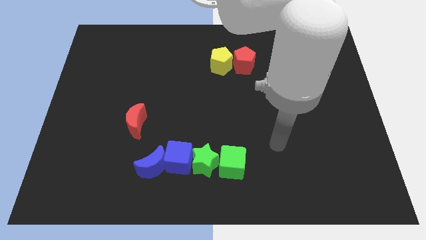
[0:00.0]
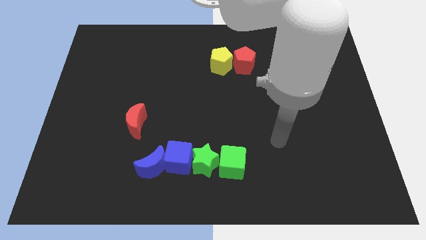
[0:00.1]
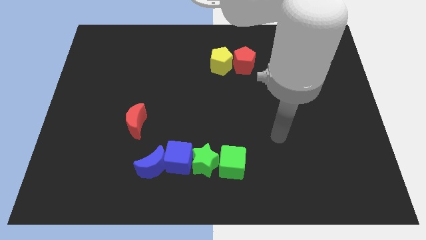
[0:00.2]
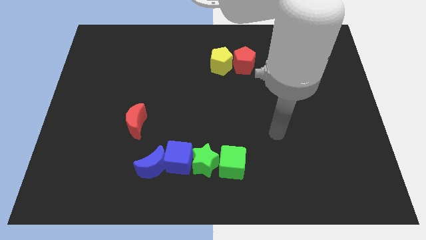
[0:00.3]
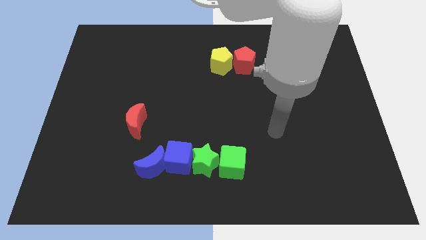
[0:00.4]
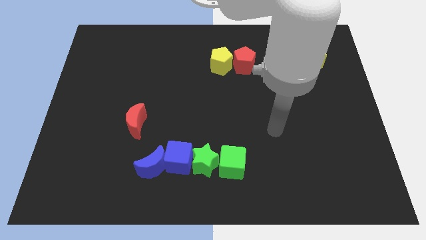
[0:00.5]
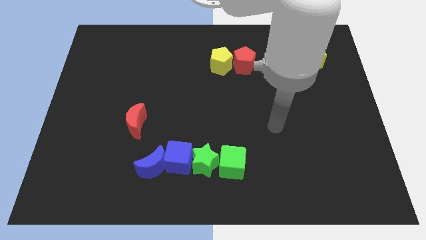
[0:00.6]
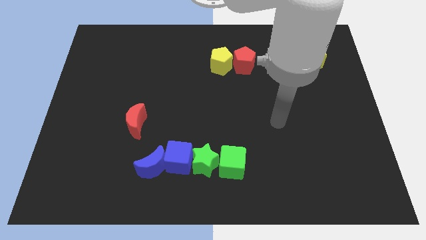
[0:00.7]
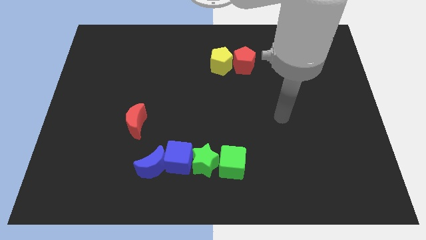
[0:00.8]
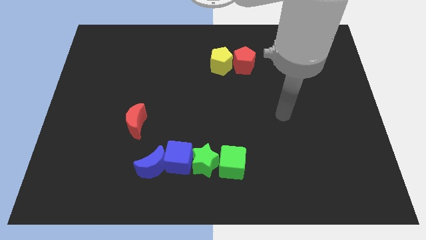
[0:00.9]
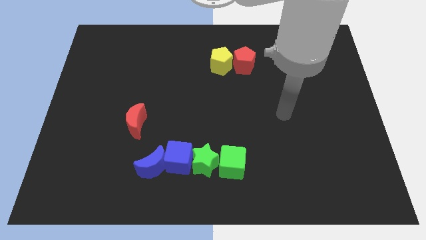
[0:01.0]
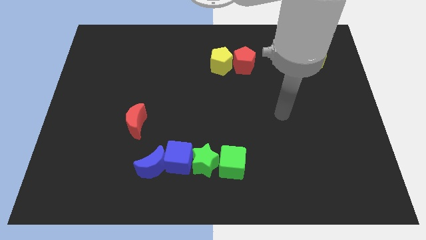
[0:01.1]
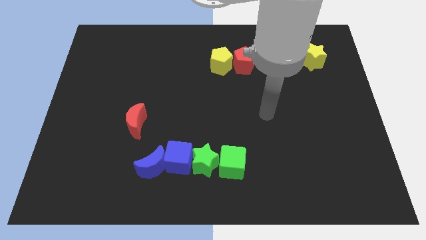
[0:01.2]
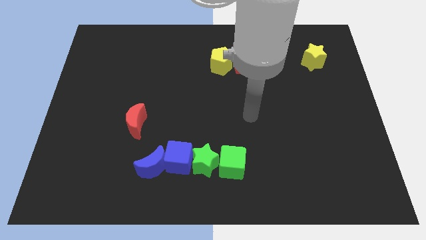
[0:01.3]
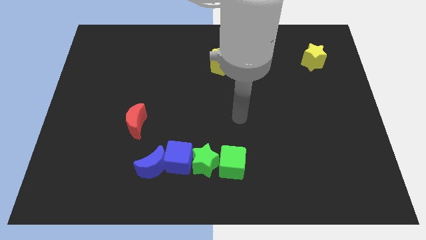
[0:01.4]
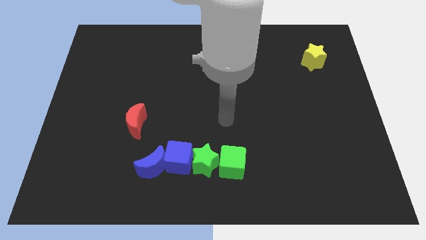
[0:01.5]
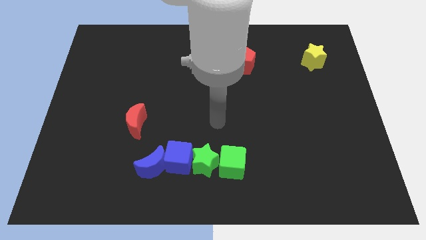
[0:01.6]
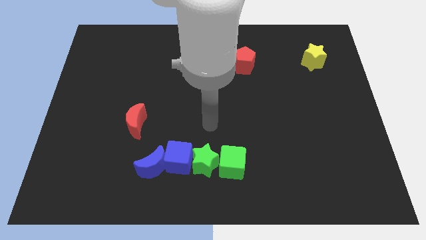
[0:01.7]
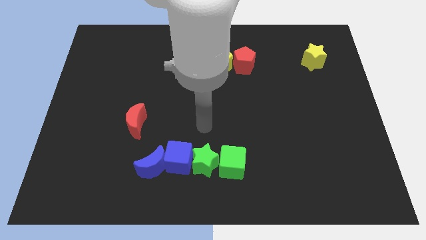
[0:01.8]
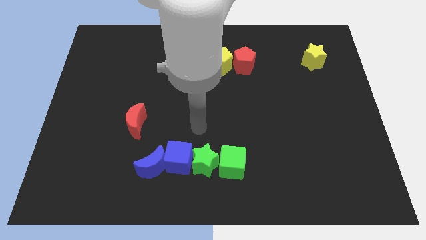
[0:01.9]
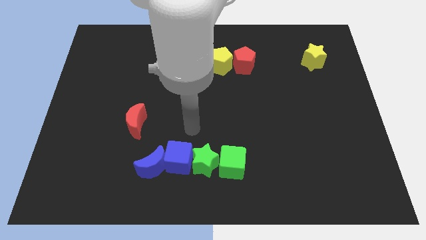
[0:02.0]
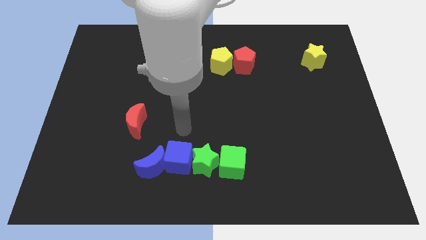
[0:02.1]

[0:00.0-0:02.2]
move your arm above to the blue cube

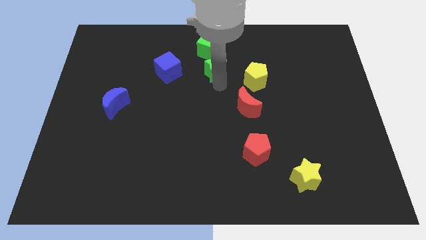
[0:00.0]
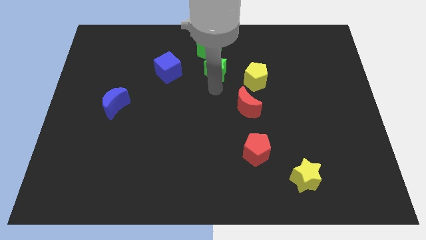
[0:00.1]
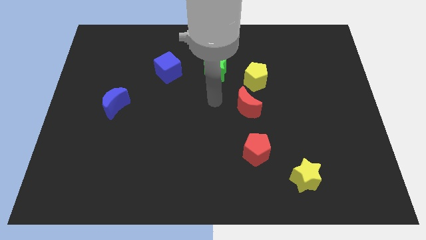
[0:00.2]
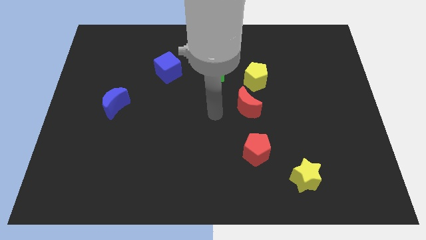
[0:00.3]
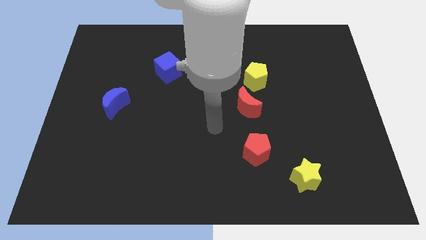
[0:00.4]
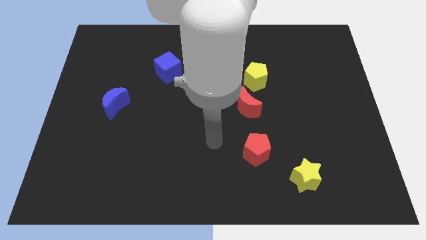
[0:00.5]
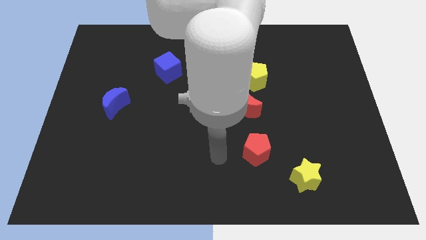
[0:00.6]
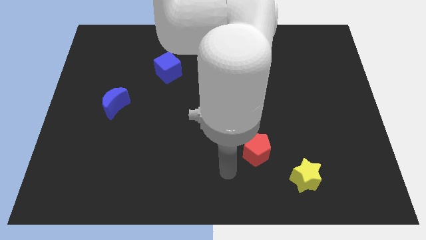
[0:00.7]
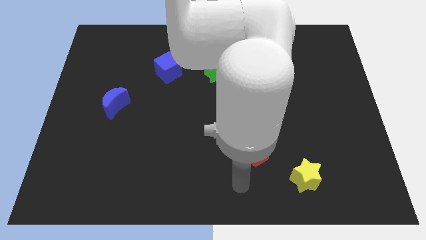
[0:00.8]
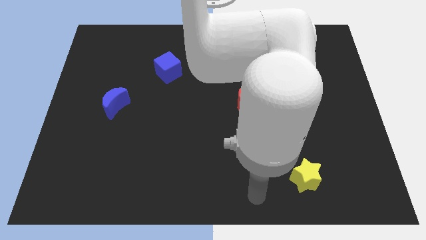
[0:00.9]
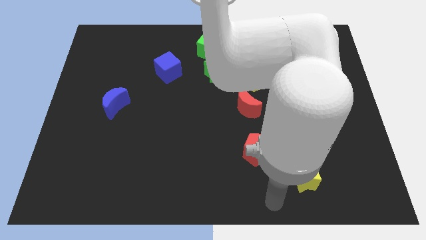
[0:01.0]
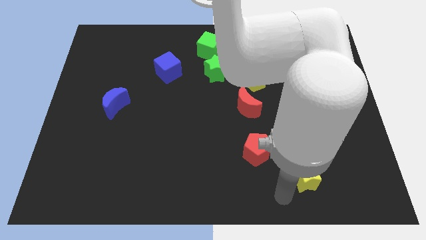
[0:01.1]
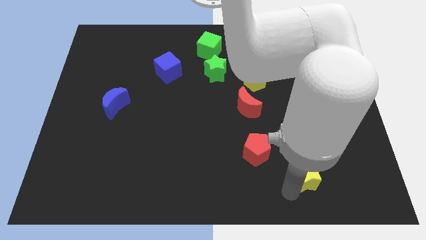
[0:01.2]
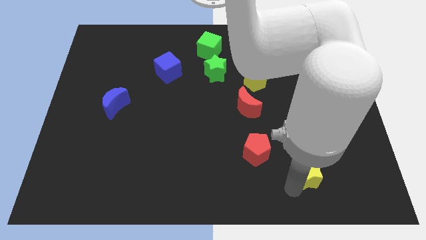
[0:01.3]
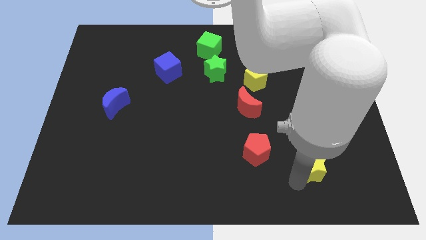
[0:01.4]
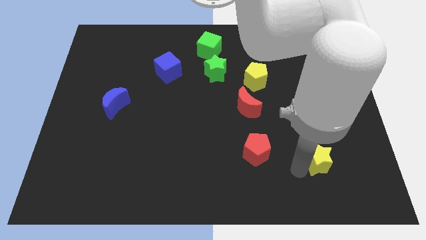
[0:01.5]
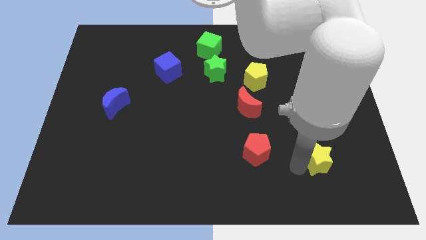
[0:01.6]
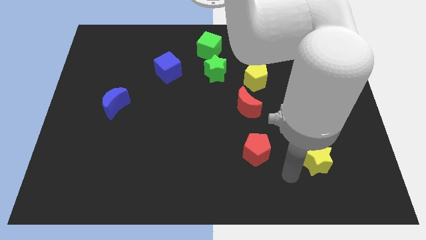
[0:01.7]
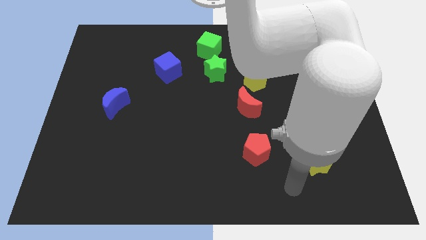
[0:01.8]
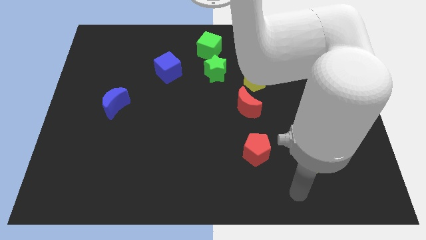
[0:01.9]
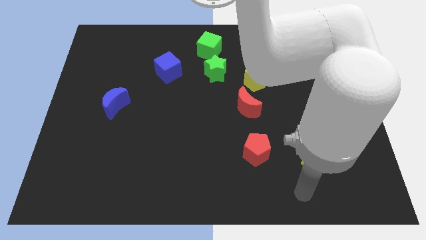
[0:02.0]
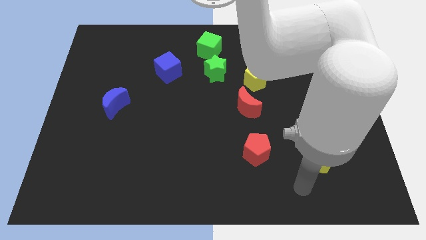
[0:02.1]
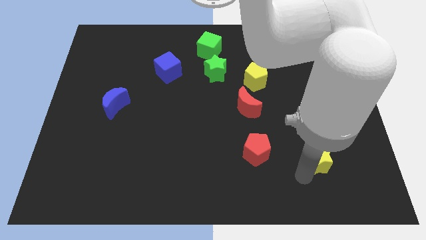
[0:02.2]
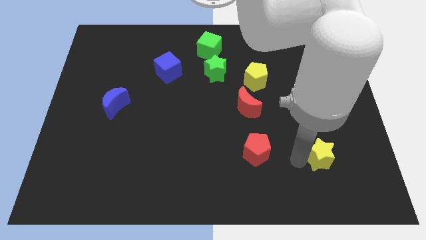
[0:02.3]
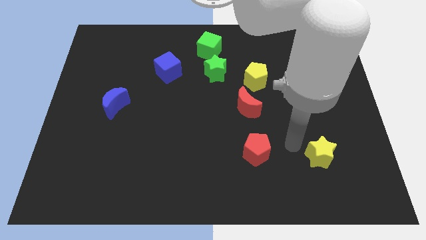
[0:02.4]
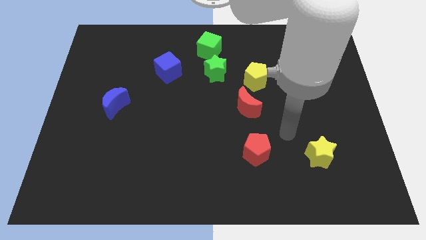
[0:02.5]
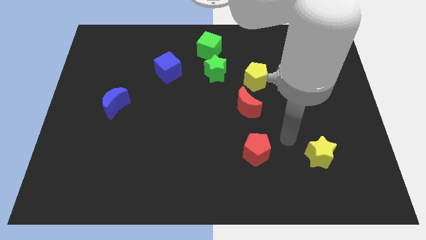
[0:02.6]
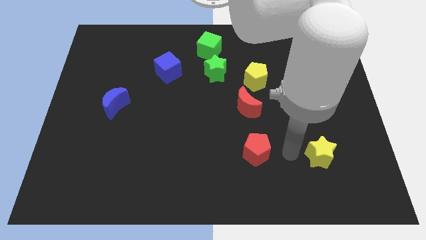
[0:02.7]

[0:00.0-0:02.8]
move the arm away from the green star

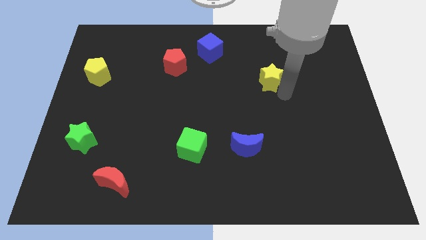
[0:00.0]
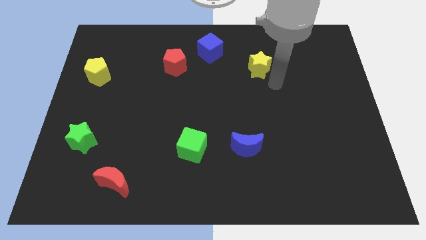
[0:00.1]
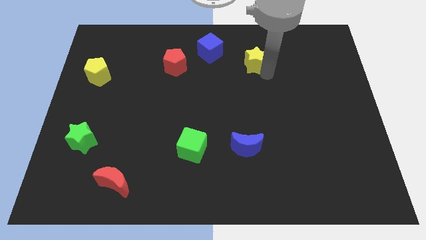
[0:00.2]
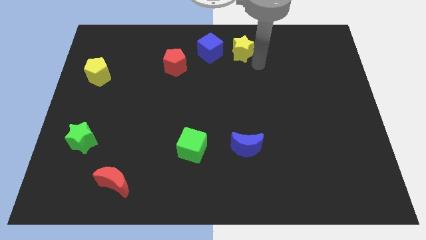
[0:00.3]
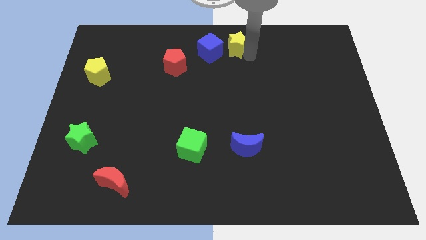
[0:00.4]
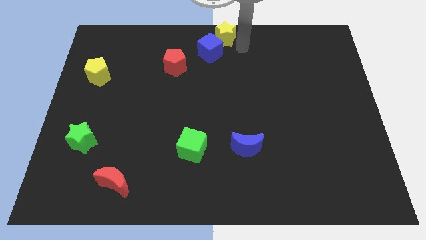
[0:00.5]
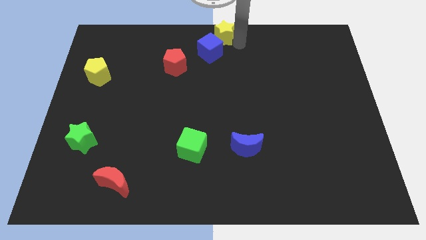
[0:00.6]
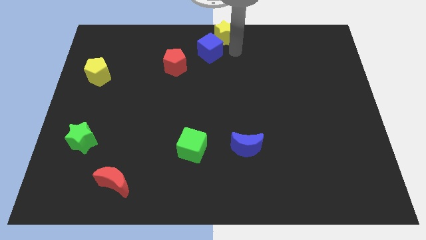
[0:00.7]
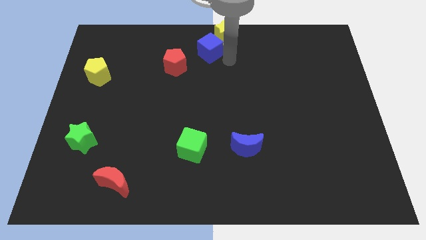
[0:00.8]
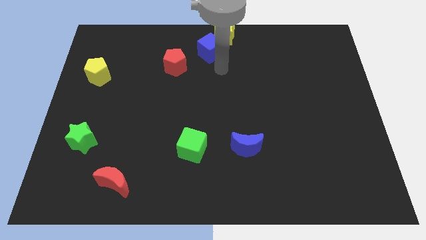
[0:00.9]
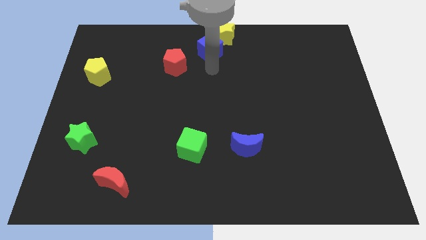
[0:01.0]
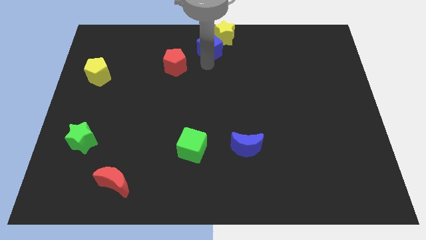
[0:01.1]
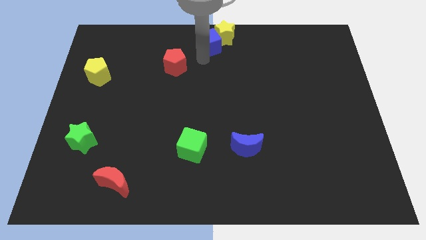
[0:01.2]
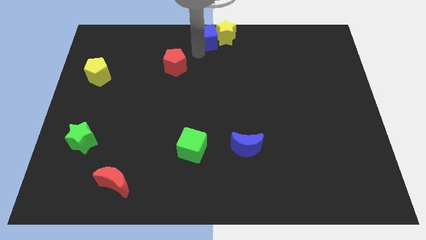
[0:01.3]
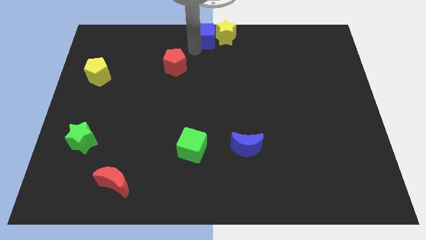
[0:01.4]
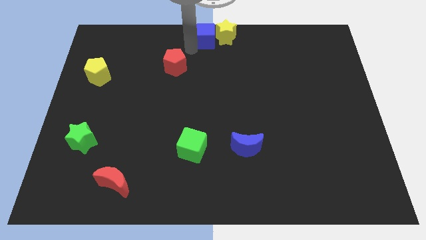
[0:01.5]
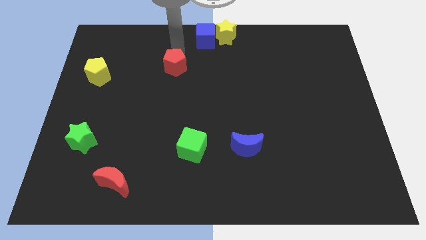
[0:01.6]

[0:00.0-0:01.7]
move the yellow star and the blue cube to the top center of the board

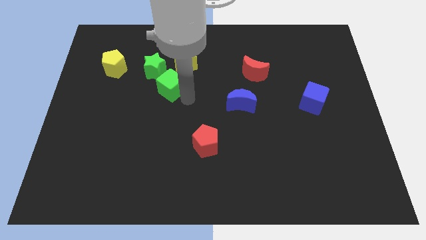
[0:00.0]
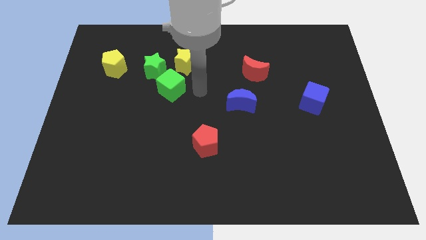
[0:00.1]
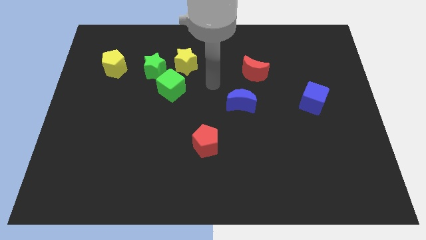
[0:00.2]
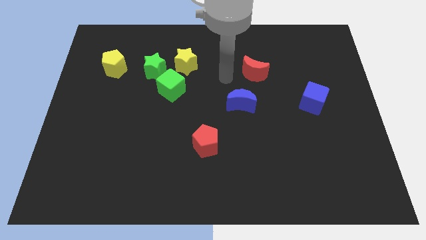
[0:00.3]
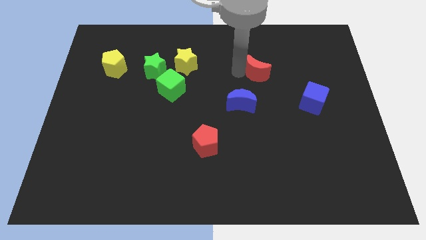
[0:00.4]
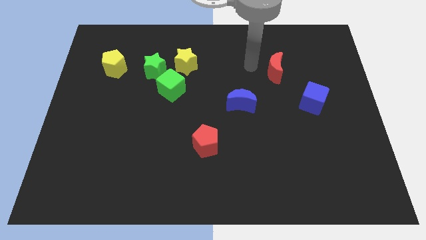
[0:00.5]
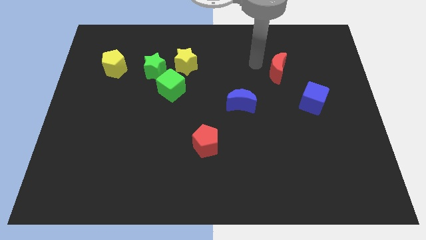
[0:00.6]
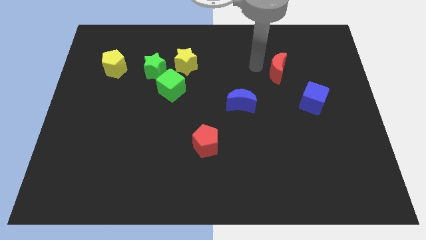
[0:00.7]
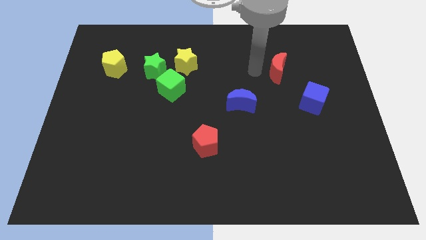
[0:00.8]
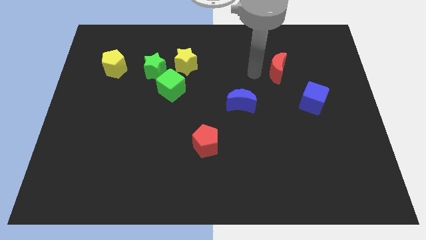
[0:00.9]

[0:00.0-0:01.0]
push the red moon to the right side of the board

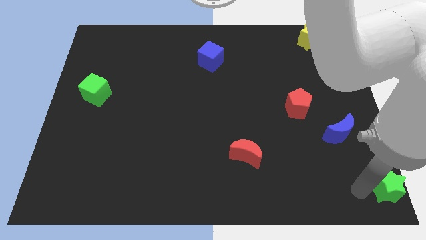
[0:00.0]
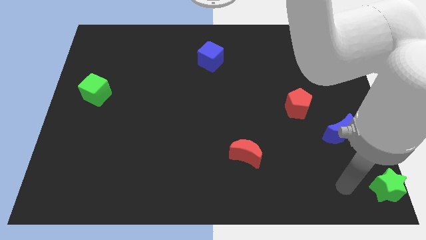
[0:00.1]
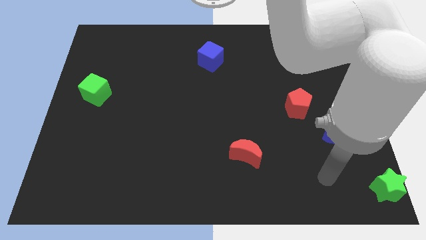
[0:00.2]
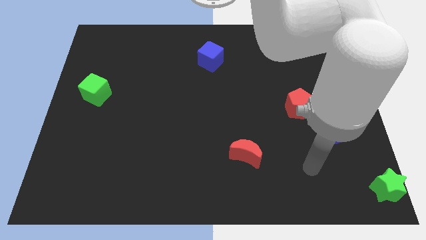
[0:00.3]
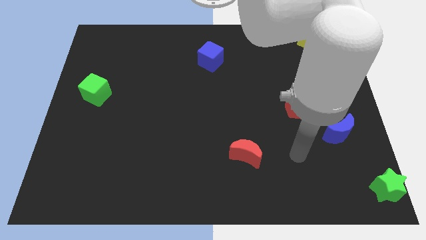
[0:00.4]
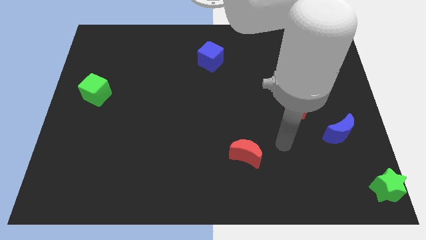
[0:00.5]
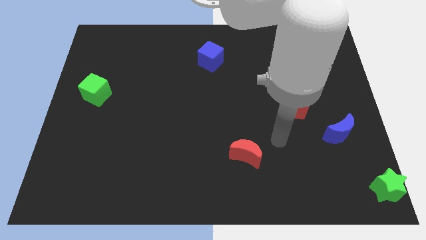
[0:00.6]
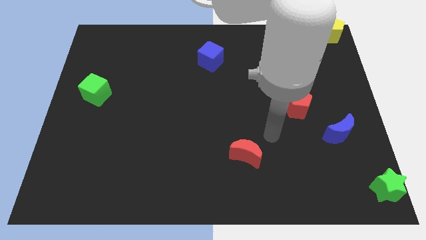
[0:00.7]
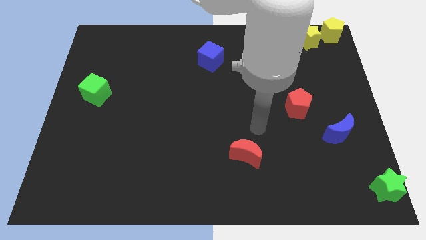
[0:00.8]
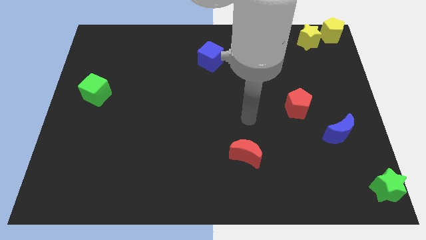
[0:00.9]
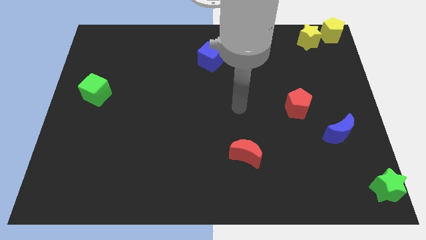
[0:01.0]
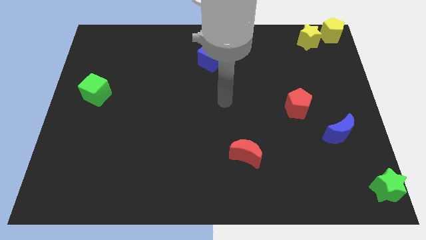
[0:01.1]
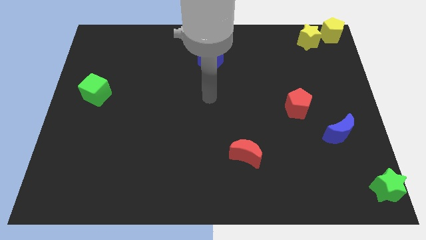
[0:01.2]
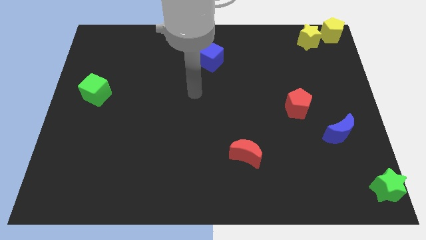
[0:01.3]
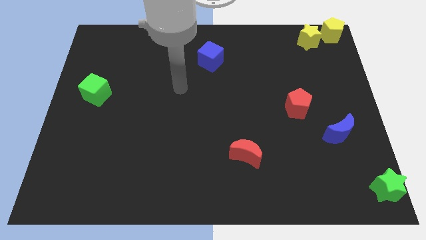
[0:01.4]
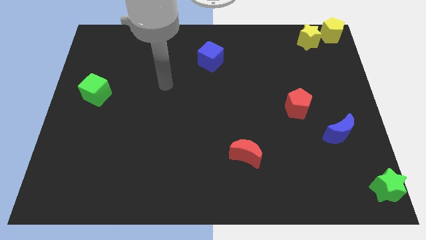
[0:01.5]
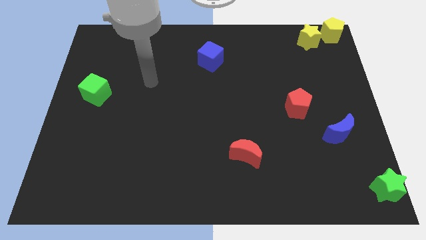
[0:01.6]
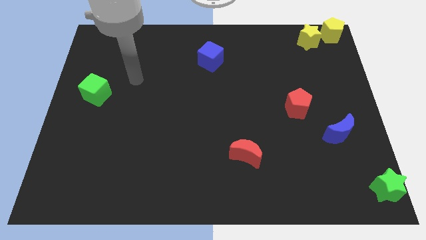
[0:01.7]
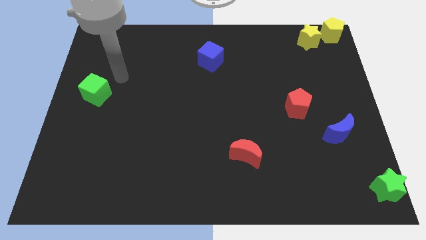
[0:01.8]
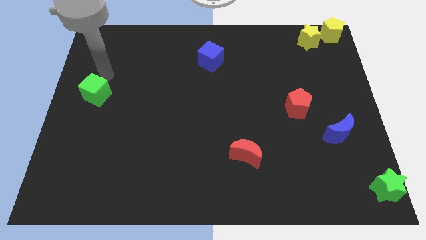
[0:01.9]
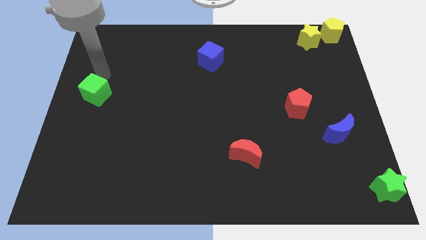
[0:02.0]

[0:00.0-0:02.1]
place the arm at the top of the green cube
